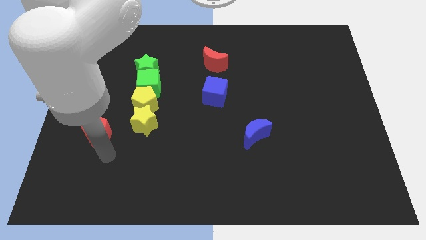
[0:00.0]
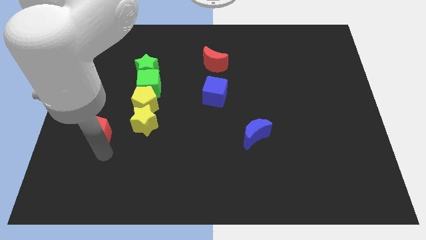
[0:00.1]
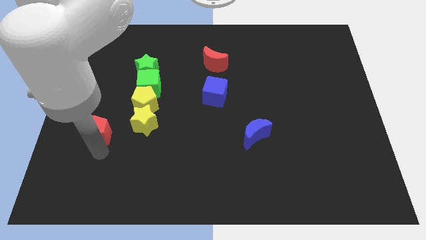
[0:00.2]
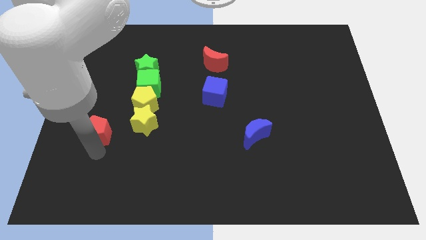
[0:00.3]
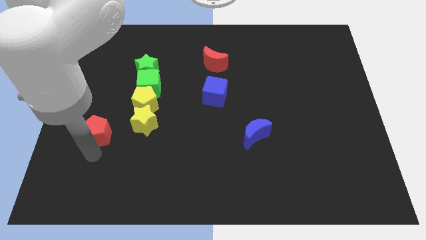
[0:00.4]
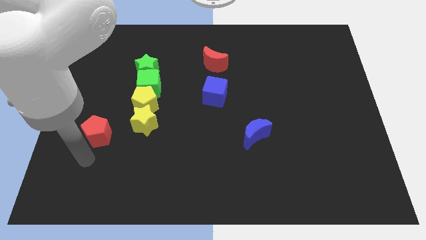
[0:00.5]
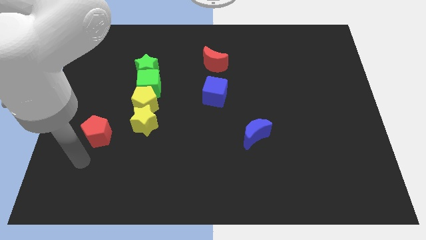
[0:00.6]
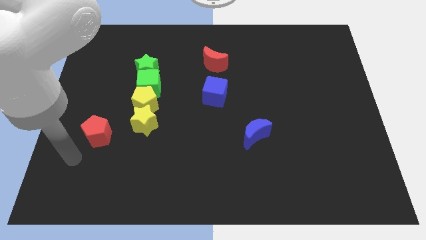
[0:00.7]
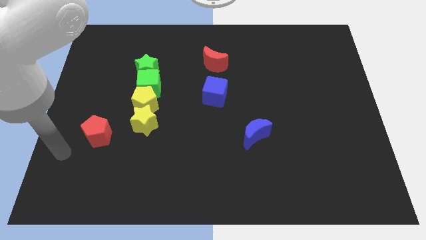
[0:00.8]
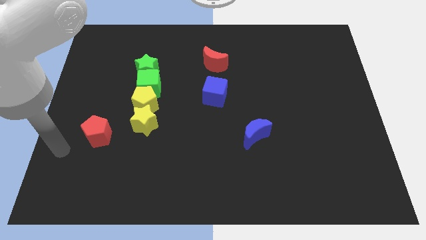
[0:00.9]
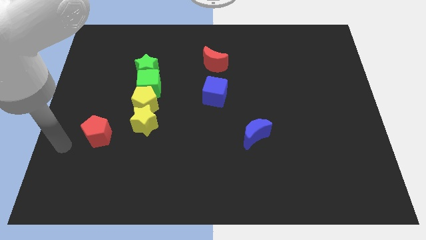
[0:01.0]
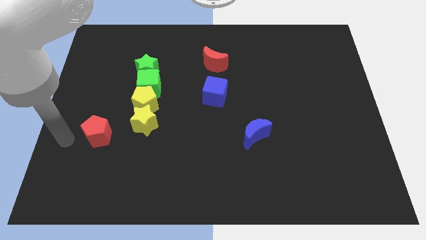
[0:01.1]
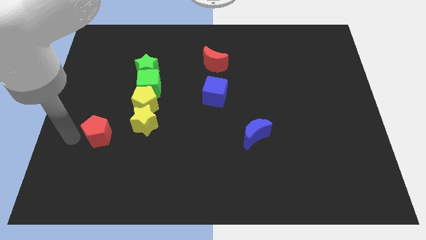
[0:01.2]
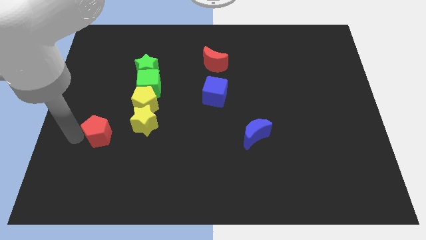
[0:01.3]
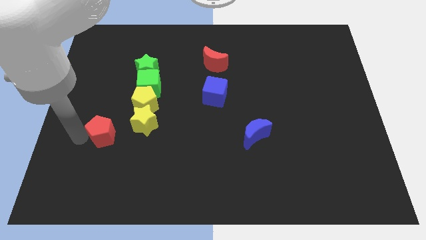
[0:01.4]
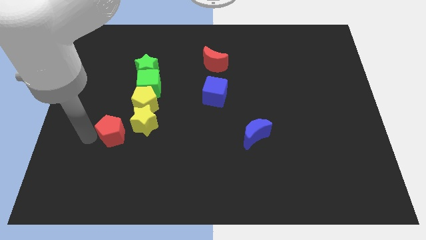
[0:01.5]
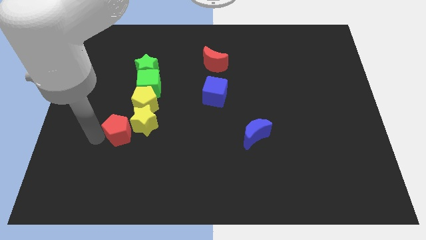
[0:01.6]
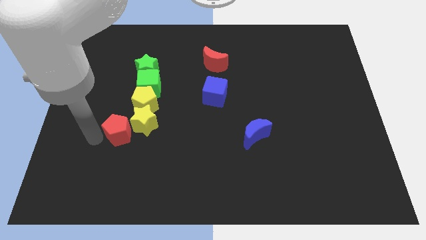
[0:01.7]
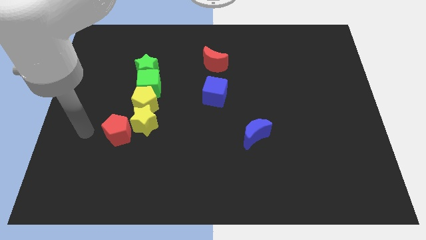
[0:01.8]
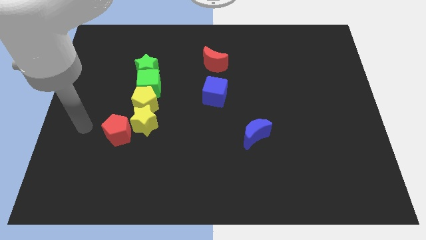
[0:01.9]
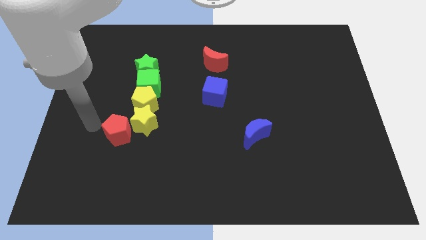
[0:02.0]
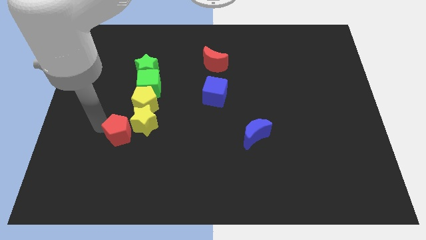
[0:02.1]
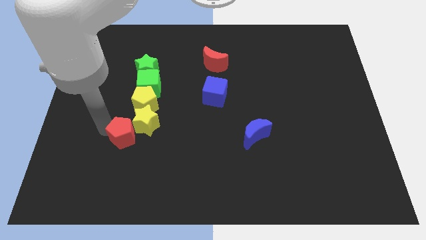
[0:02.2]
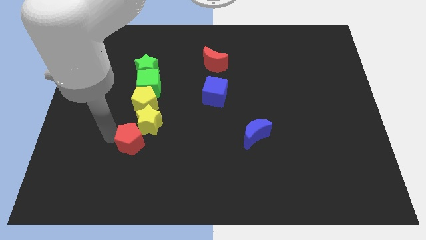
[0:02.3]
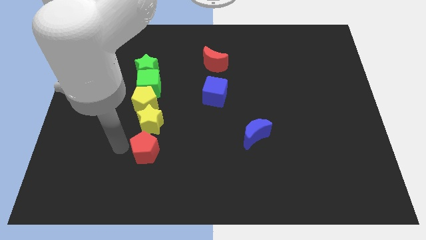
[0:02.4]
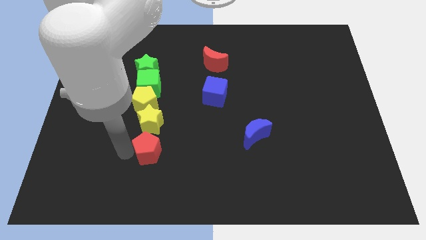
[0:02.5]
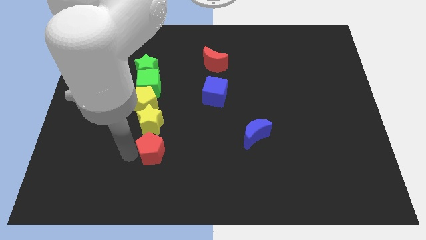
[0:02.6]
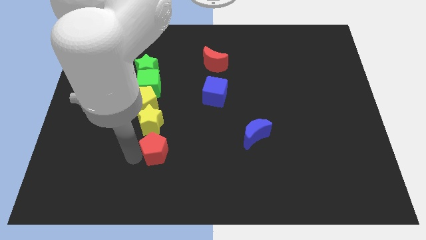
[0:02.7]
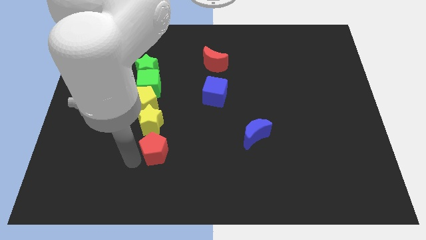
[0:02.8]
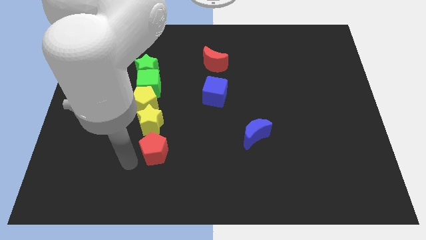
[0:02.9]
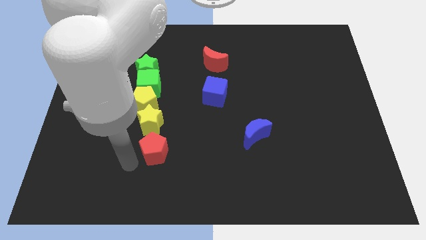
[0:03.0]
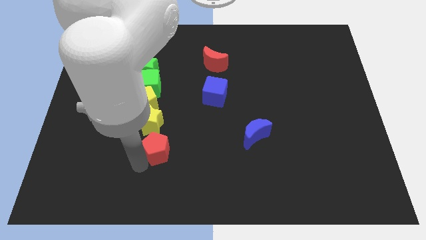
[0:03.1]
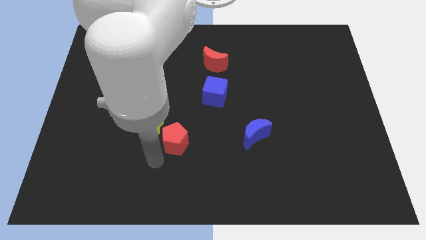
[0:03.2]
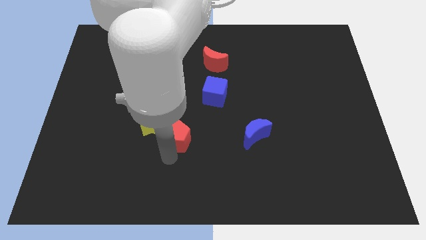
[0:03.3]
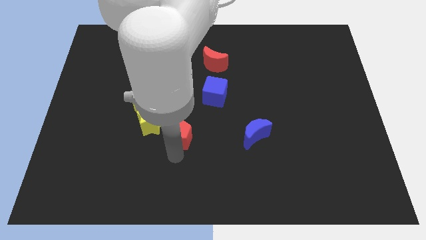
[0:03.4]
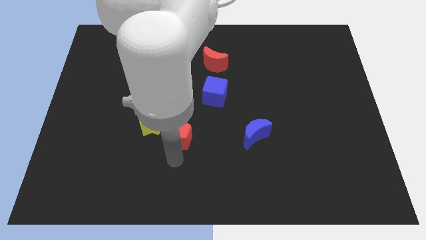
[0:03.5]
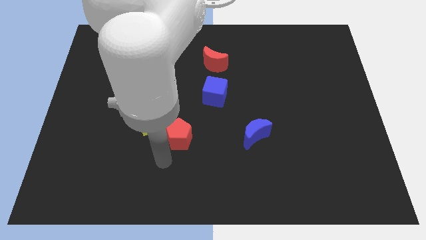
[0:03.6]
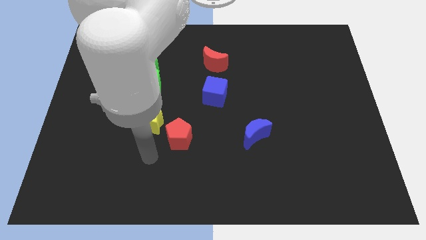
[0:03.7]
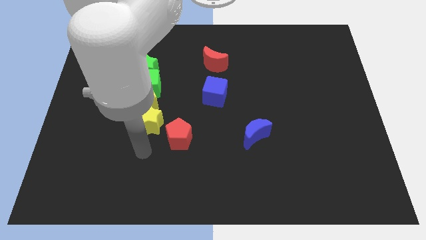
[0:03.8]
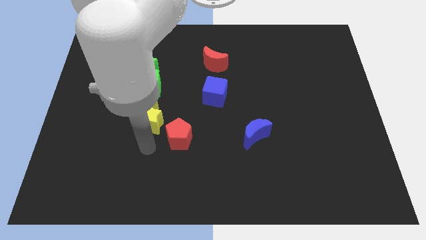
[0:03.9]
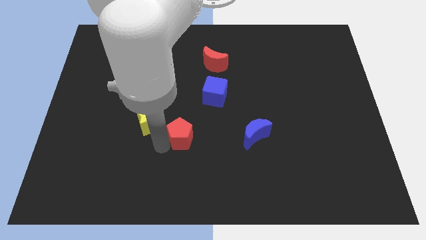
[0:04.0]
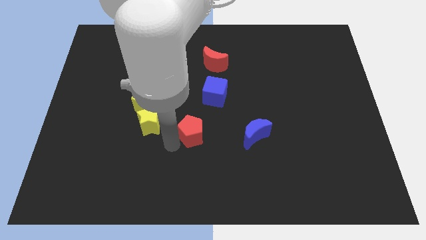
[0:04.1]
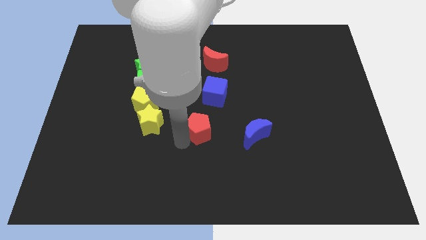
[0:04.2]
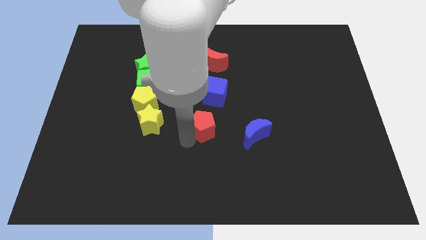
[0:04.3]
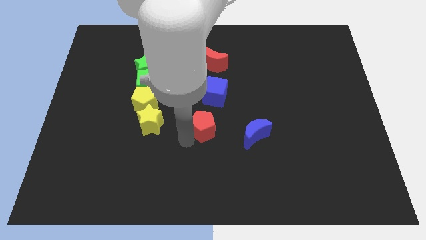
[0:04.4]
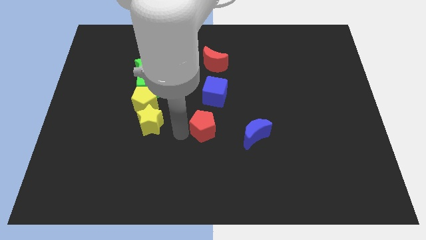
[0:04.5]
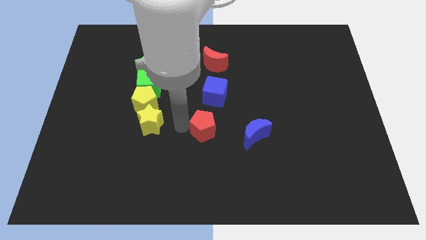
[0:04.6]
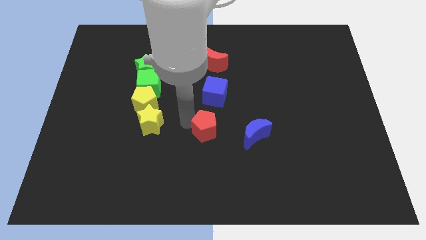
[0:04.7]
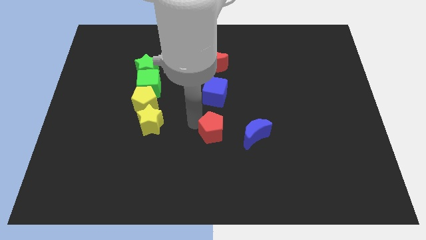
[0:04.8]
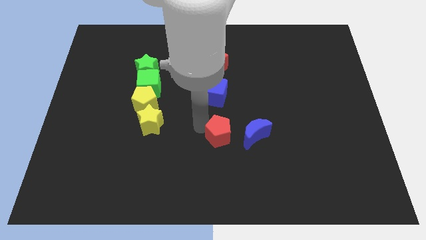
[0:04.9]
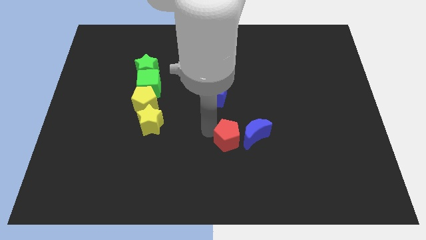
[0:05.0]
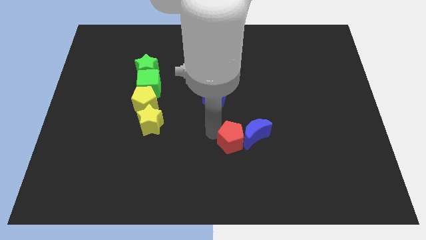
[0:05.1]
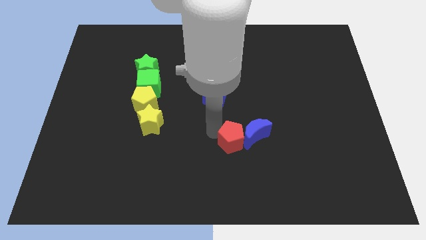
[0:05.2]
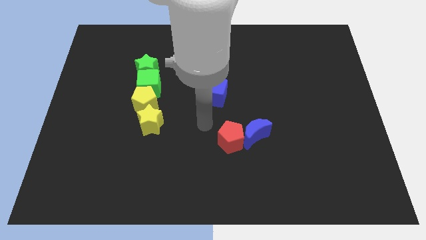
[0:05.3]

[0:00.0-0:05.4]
move the red pentagon to the left of the blue moon

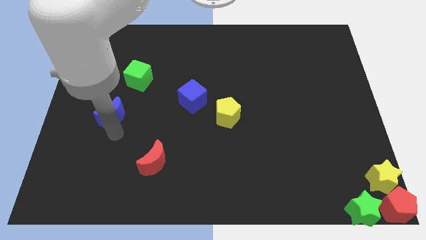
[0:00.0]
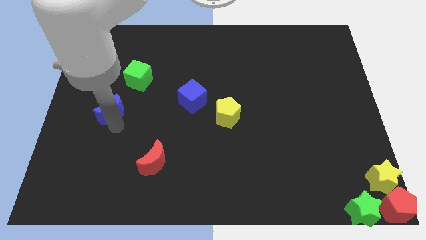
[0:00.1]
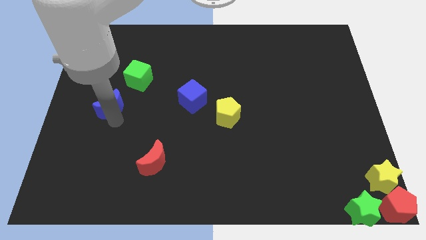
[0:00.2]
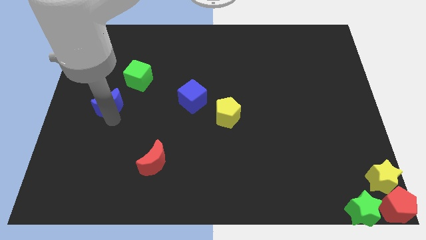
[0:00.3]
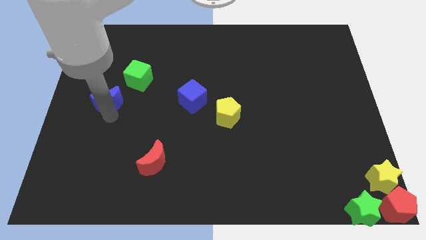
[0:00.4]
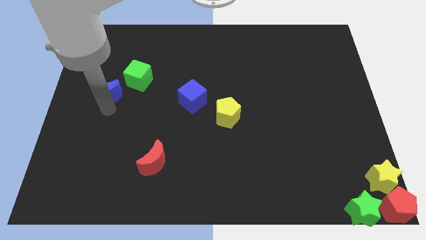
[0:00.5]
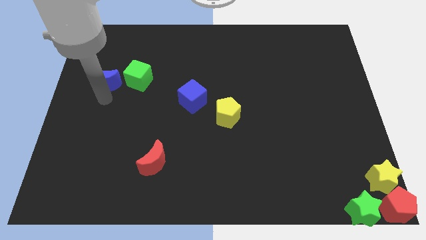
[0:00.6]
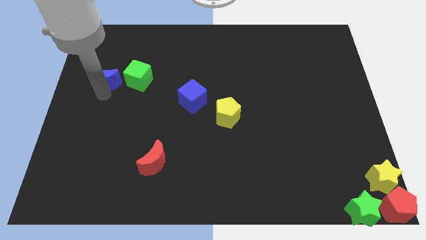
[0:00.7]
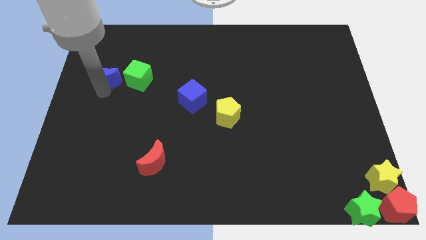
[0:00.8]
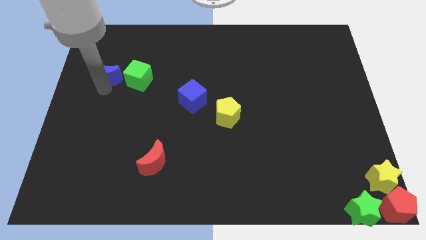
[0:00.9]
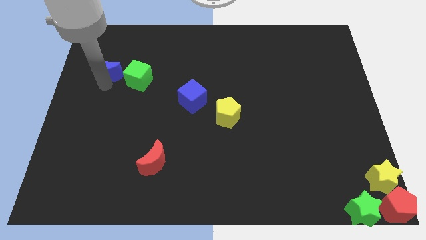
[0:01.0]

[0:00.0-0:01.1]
place the blue crescent to the left side of the green cube

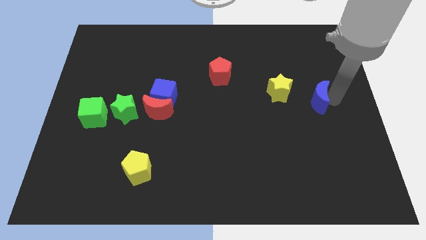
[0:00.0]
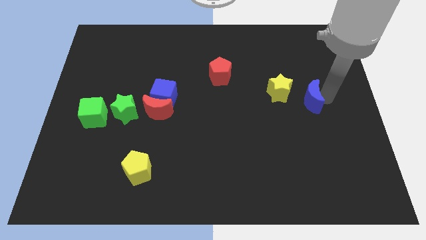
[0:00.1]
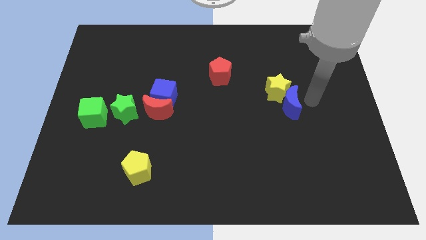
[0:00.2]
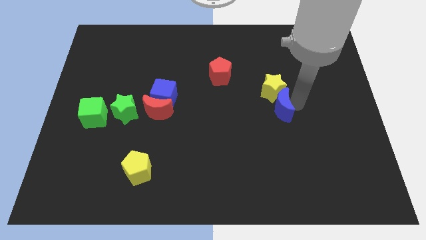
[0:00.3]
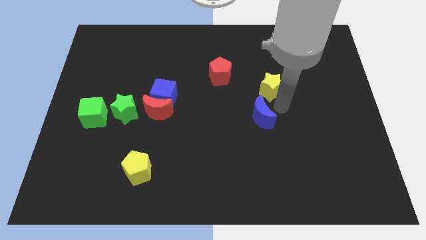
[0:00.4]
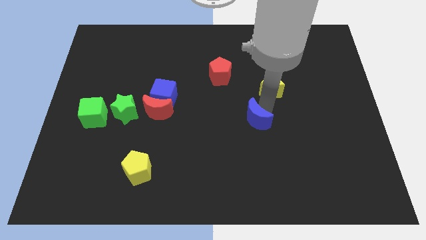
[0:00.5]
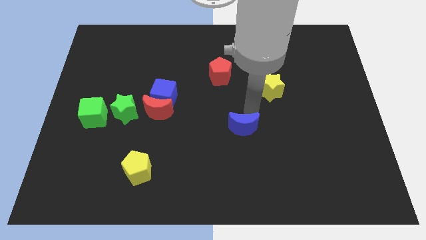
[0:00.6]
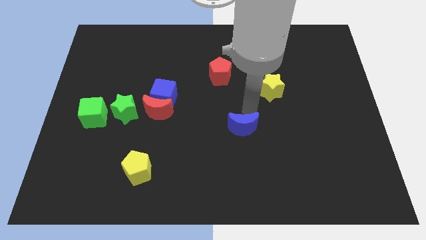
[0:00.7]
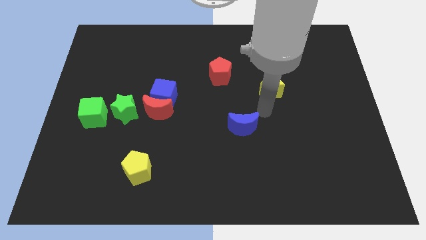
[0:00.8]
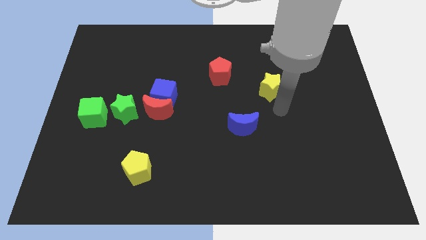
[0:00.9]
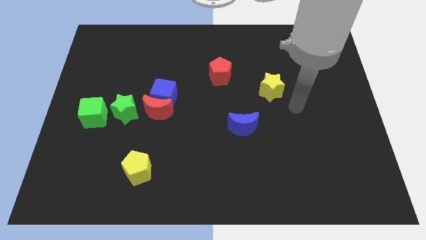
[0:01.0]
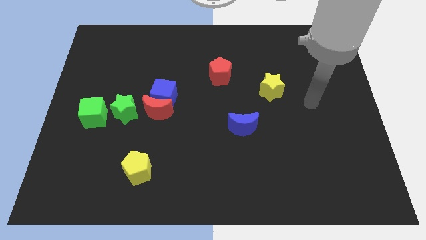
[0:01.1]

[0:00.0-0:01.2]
move the blue moon diagonally to the bottom left to the yellow star

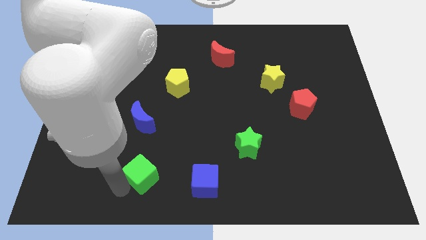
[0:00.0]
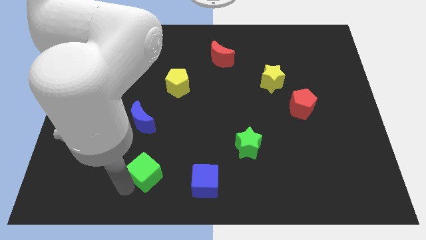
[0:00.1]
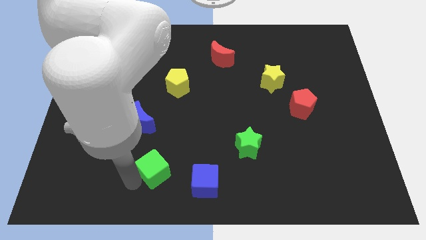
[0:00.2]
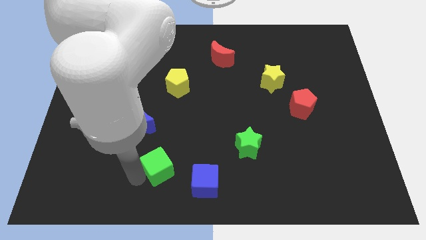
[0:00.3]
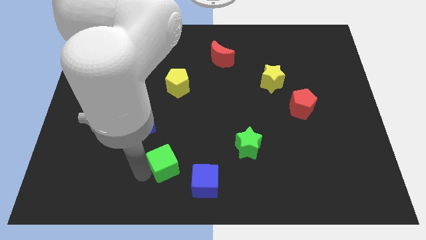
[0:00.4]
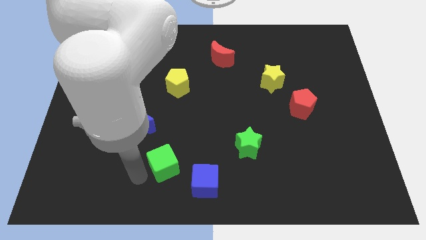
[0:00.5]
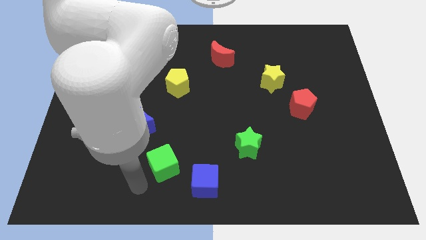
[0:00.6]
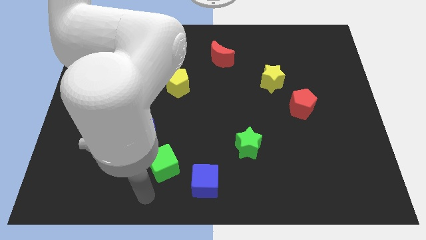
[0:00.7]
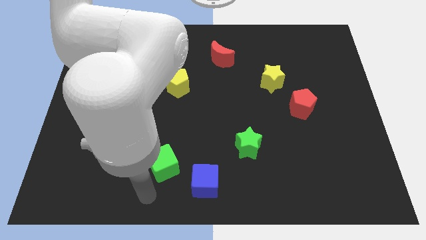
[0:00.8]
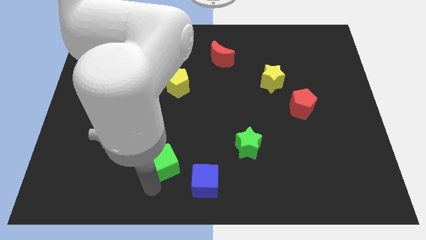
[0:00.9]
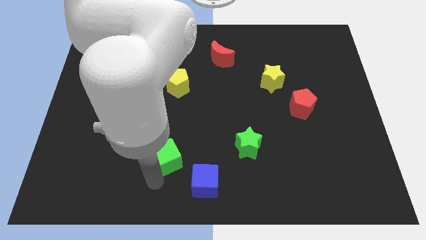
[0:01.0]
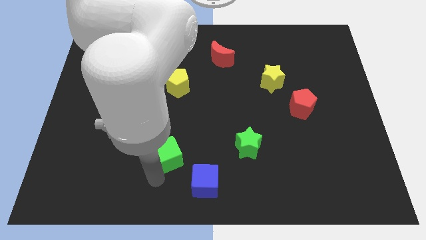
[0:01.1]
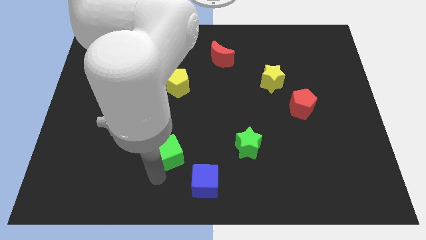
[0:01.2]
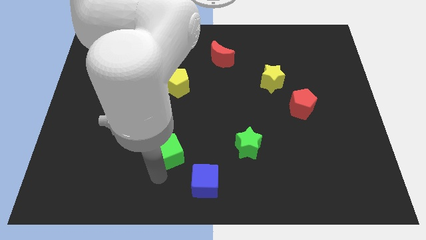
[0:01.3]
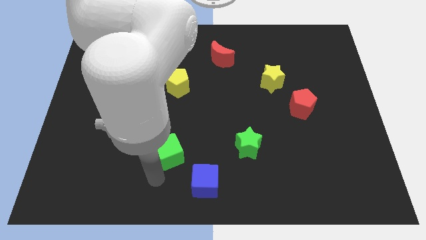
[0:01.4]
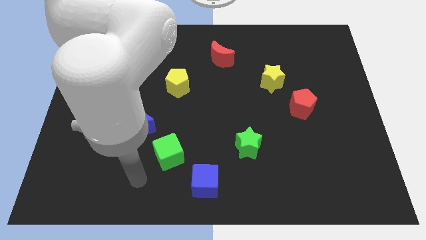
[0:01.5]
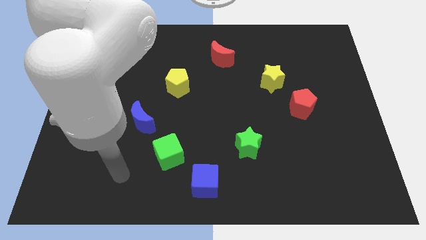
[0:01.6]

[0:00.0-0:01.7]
place the green cube between the blue moon and blue cube
